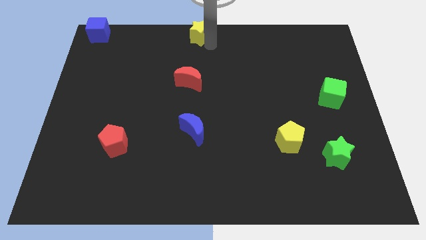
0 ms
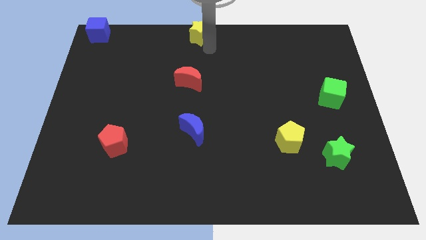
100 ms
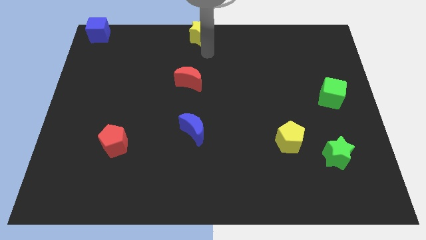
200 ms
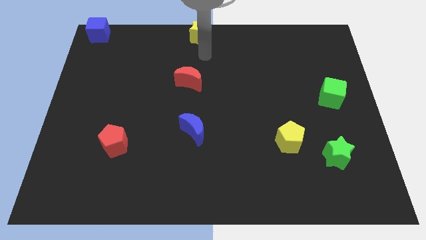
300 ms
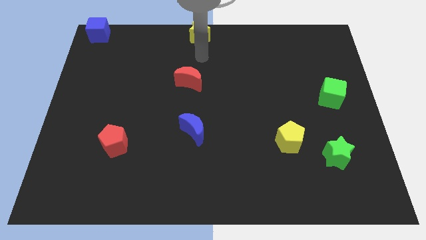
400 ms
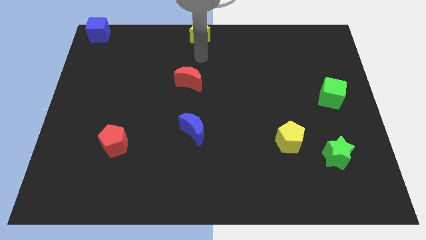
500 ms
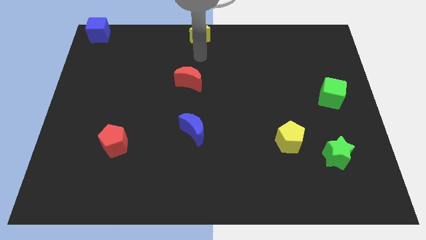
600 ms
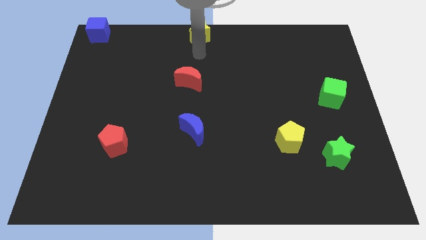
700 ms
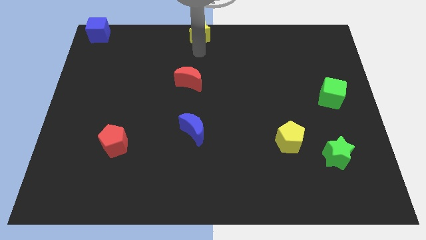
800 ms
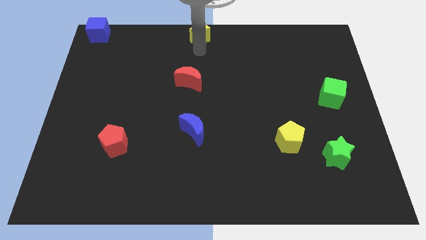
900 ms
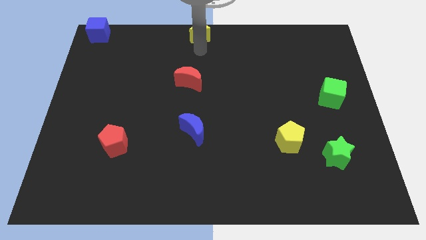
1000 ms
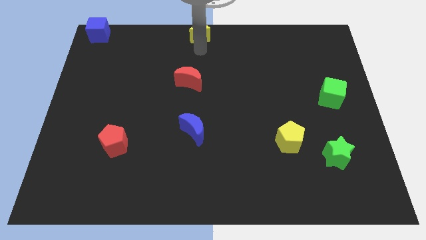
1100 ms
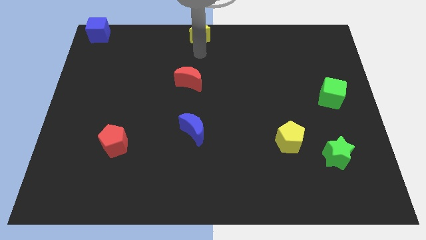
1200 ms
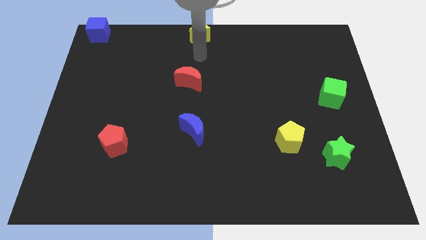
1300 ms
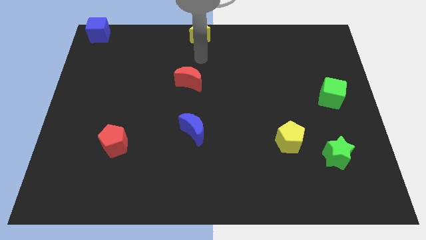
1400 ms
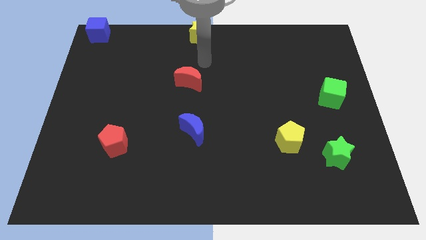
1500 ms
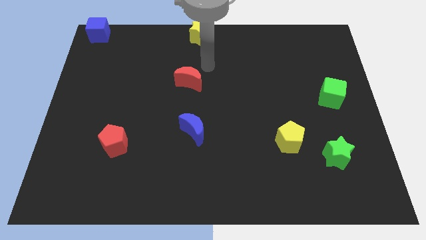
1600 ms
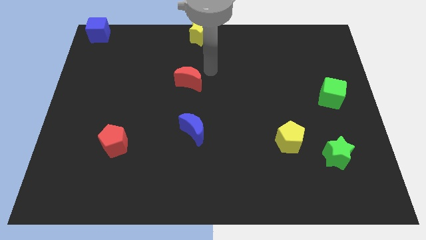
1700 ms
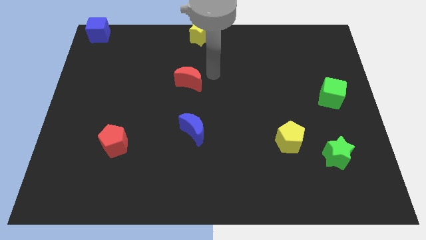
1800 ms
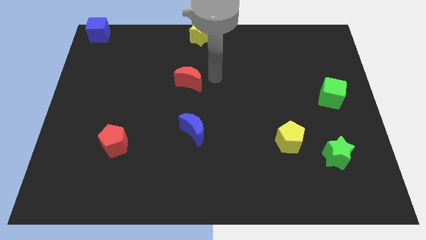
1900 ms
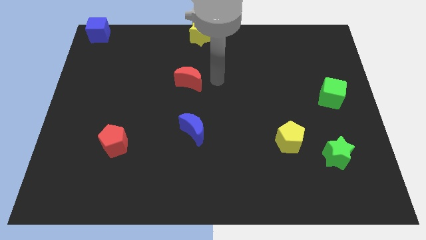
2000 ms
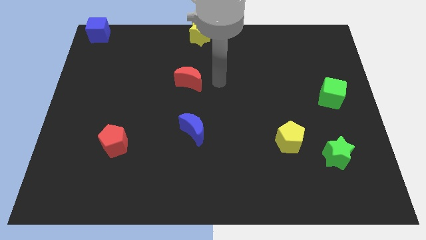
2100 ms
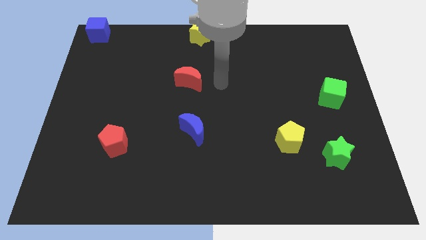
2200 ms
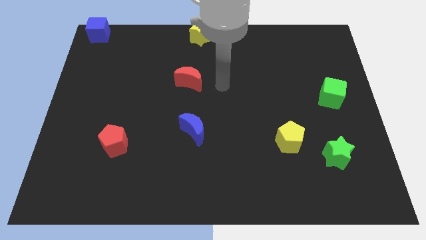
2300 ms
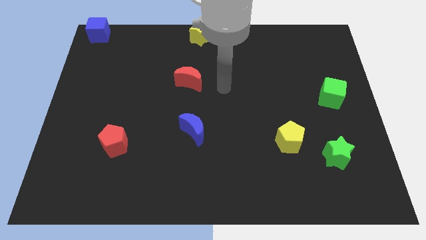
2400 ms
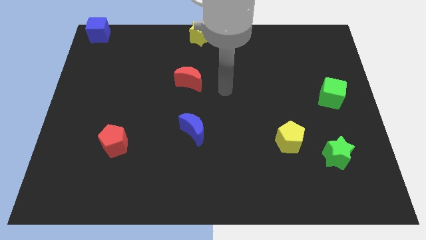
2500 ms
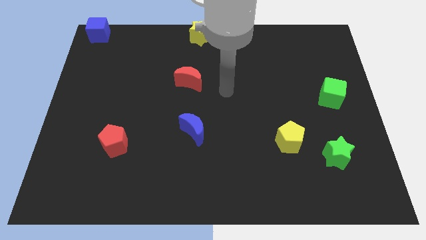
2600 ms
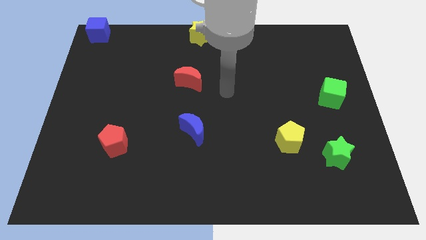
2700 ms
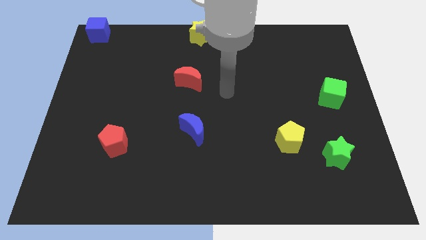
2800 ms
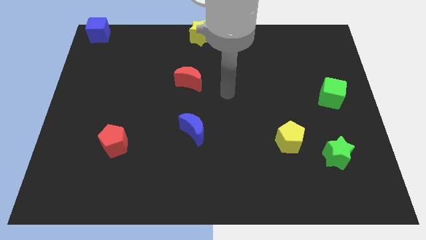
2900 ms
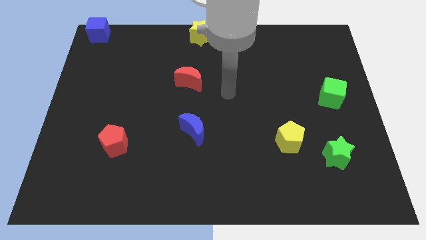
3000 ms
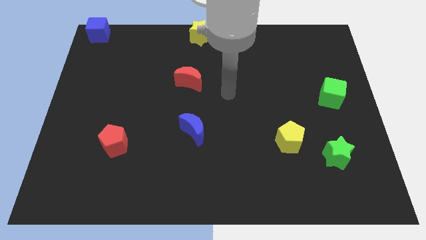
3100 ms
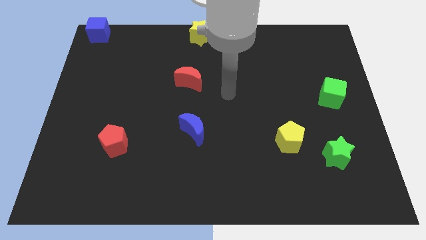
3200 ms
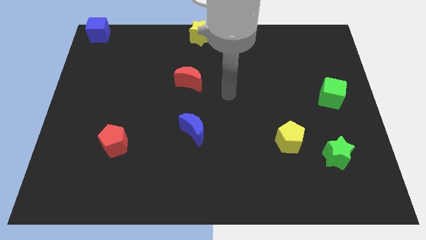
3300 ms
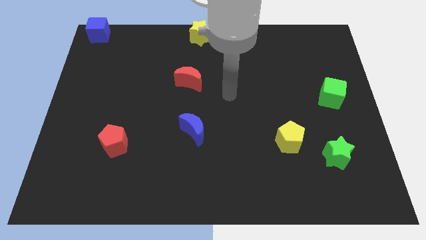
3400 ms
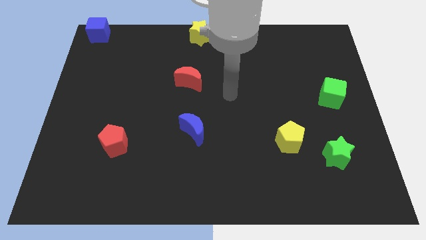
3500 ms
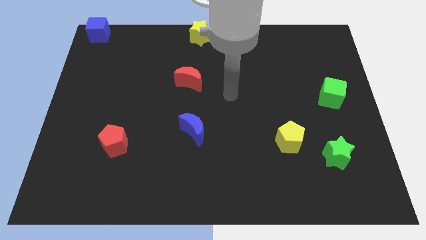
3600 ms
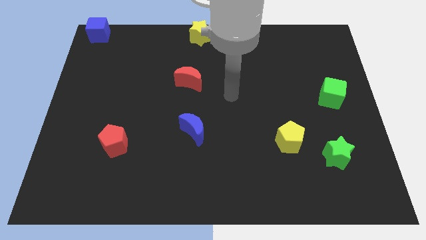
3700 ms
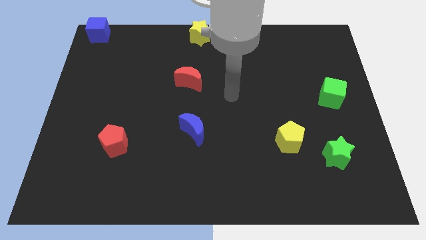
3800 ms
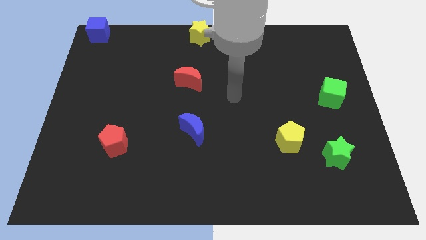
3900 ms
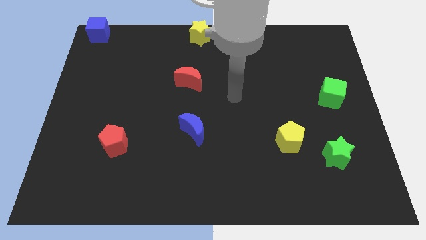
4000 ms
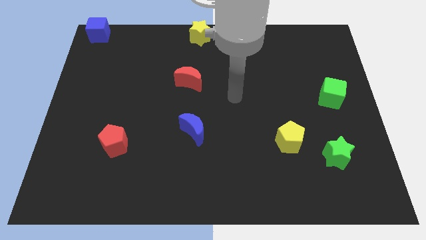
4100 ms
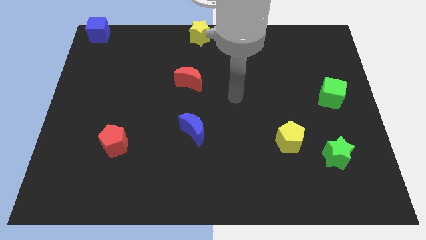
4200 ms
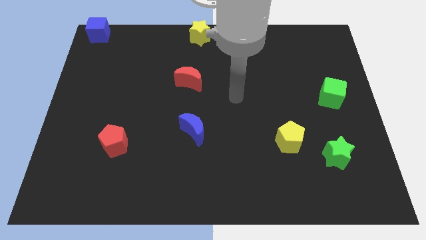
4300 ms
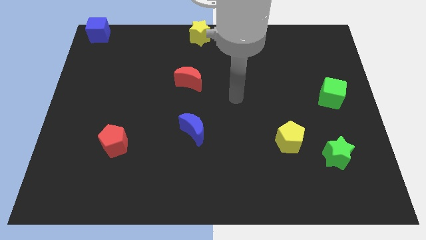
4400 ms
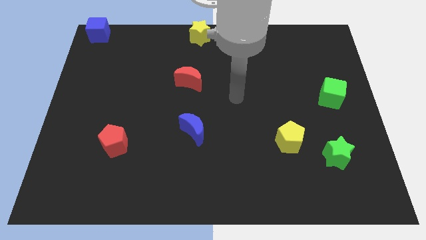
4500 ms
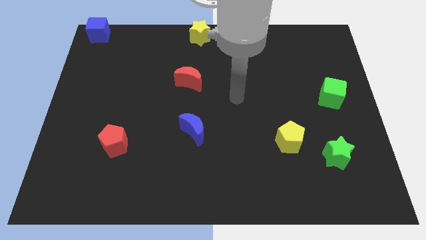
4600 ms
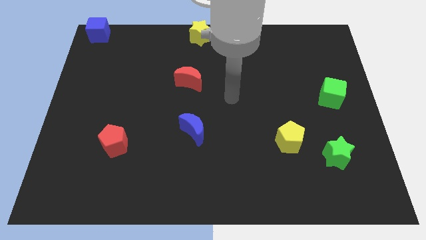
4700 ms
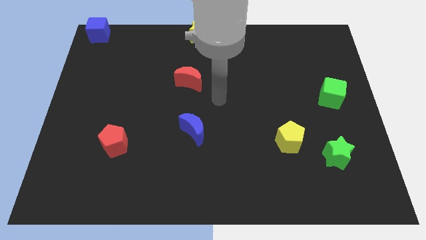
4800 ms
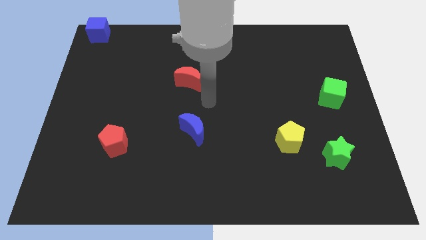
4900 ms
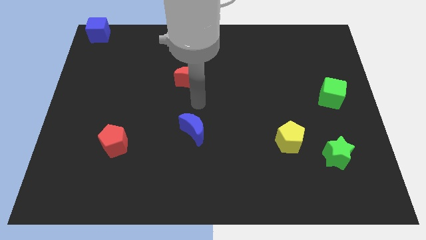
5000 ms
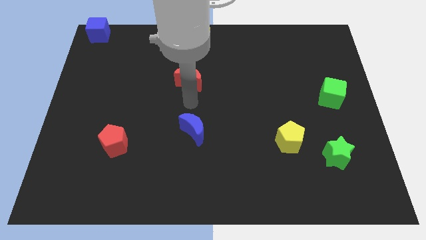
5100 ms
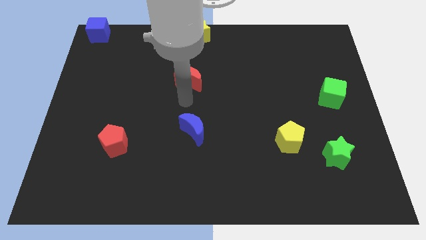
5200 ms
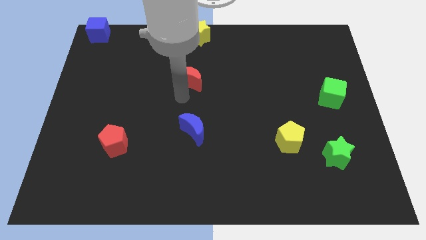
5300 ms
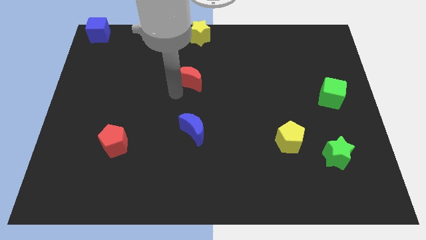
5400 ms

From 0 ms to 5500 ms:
drag the arm towards the red crescent

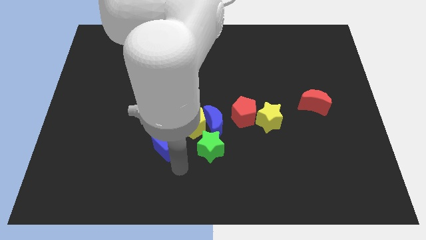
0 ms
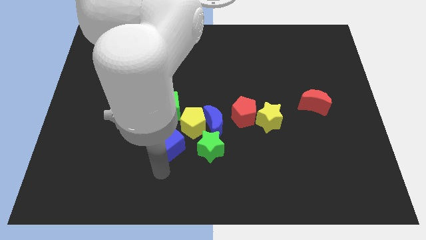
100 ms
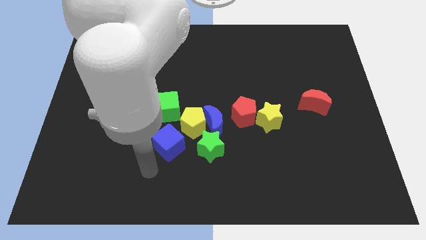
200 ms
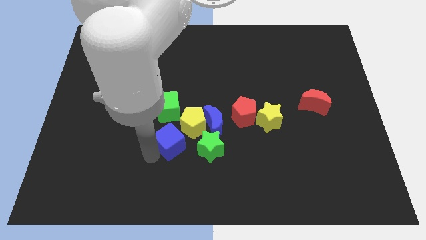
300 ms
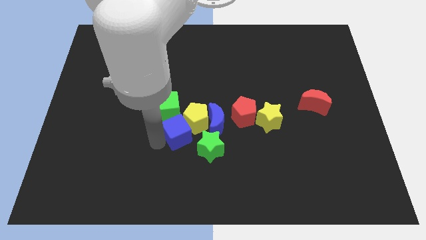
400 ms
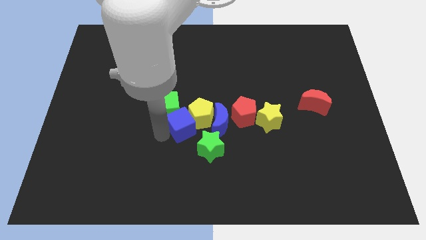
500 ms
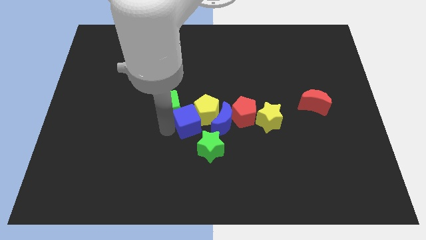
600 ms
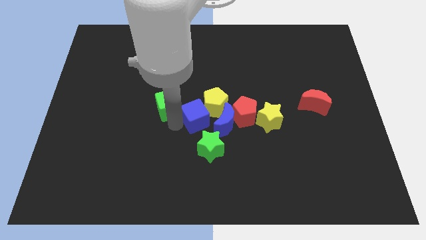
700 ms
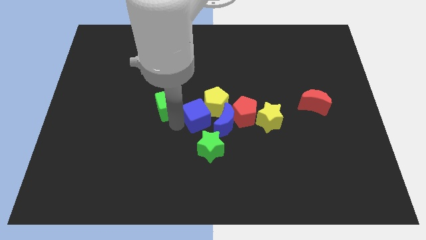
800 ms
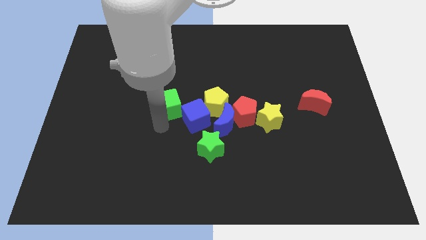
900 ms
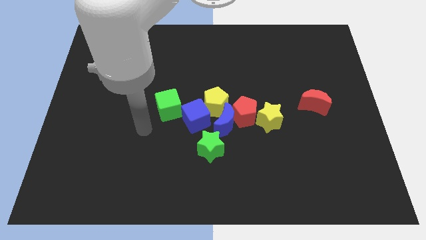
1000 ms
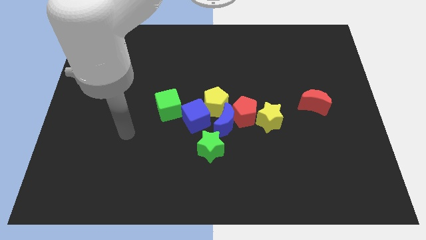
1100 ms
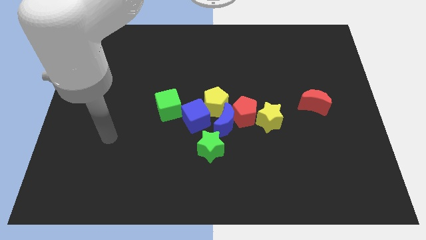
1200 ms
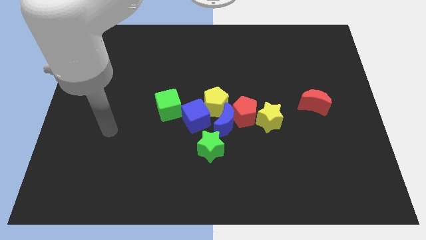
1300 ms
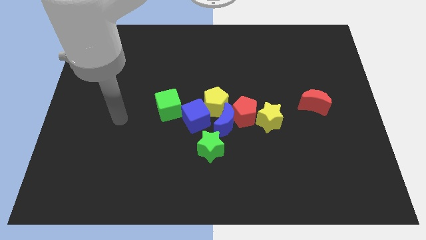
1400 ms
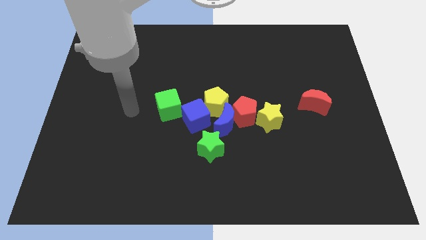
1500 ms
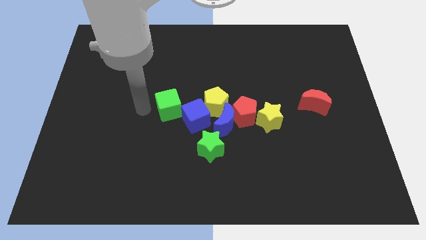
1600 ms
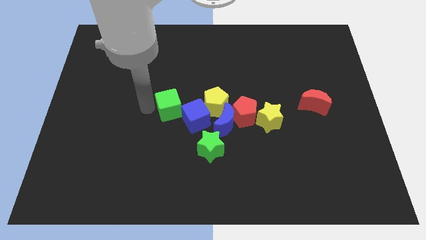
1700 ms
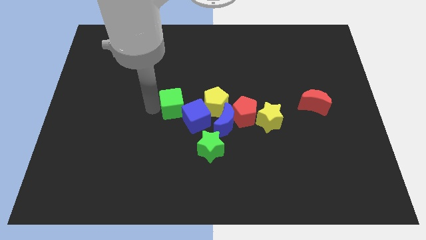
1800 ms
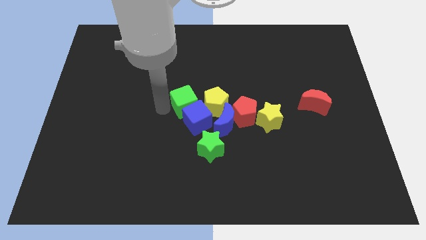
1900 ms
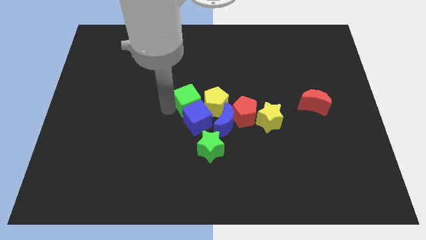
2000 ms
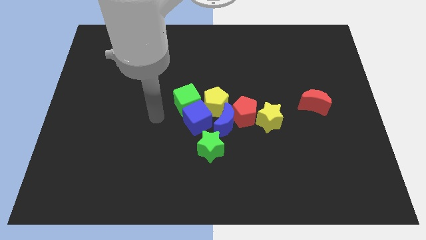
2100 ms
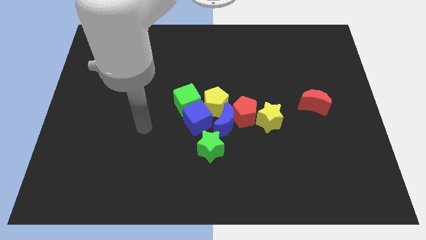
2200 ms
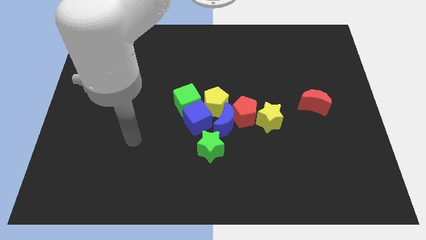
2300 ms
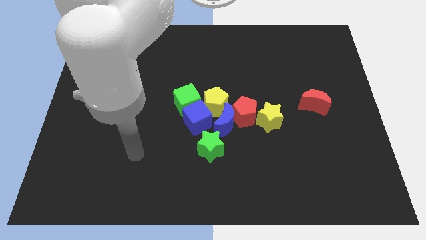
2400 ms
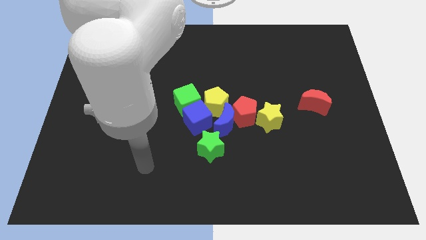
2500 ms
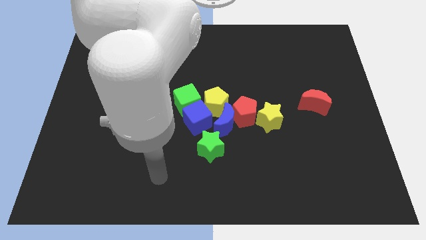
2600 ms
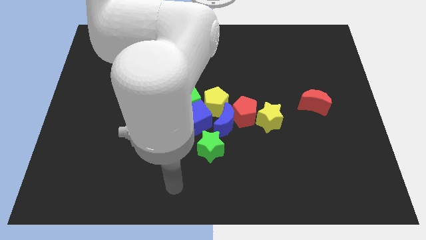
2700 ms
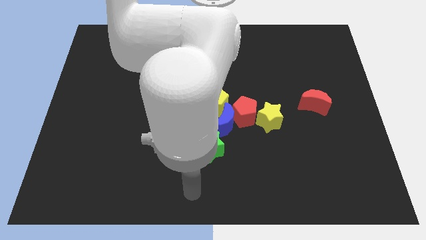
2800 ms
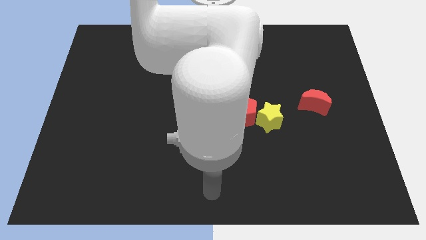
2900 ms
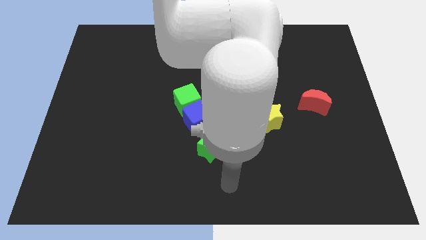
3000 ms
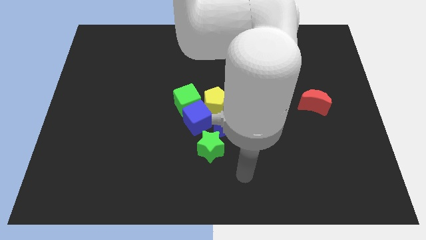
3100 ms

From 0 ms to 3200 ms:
push the blue and the green cube into the yellow pentagon

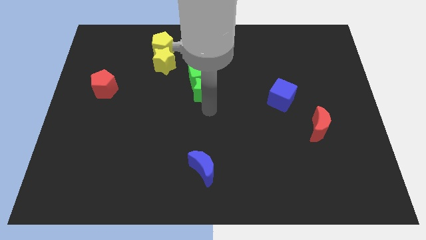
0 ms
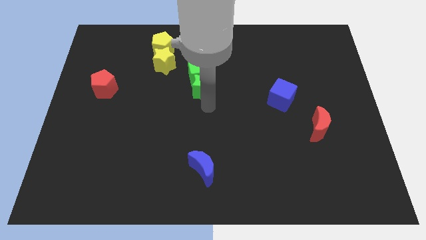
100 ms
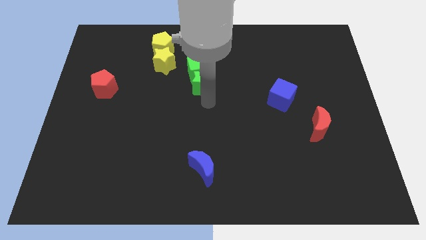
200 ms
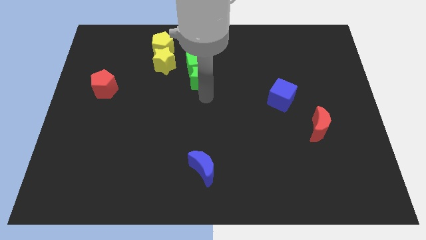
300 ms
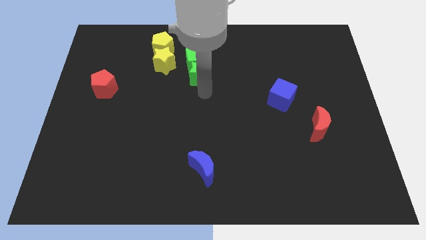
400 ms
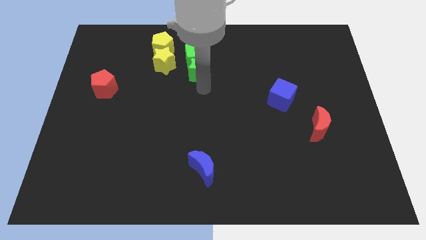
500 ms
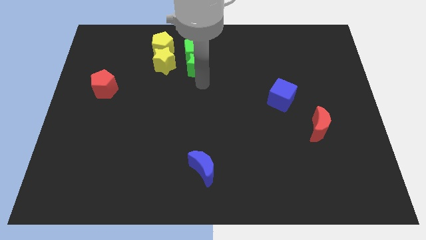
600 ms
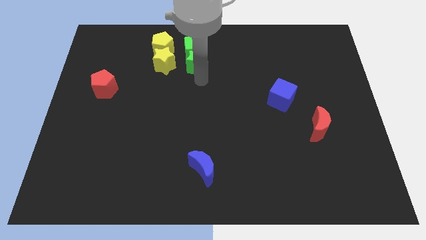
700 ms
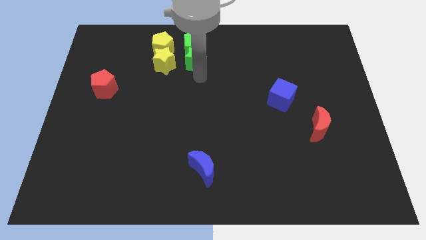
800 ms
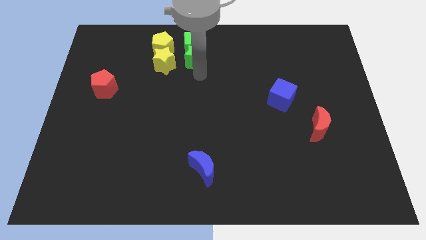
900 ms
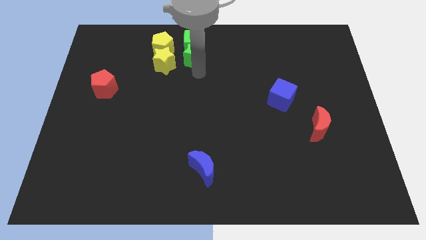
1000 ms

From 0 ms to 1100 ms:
place the green blocks to the right side of the yellow blocks
